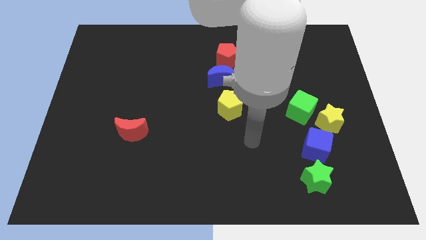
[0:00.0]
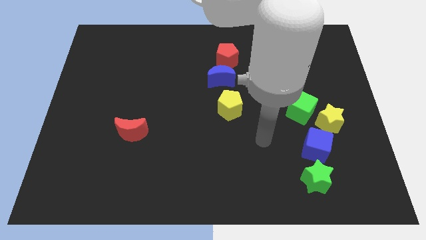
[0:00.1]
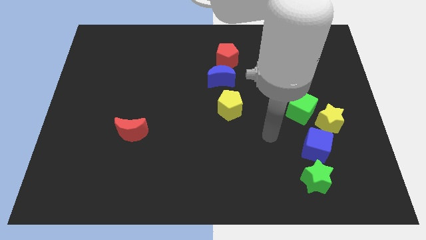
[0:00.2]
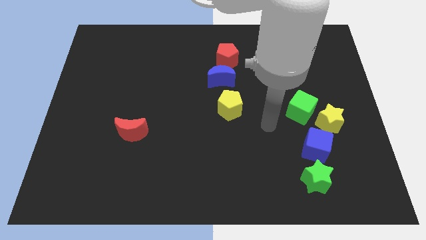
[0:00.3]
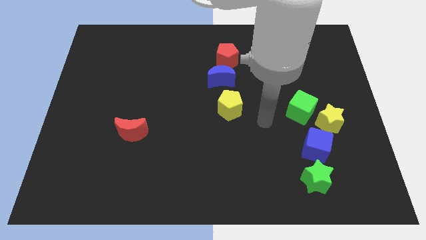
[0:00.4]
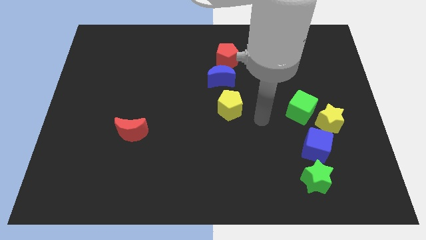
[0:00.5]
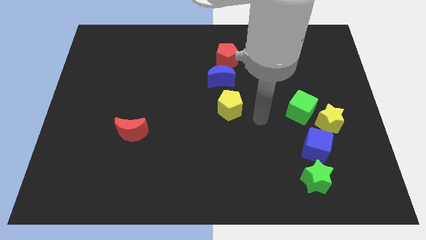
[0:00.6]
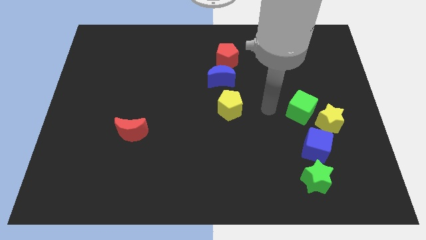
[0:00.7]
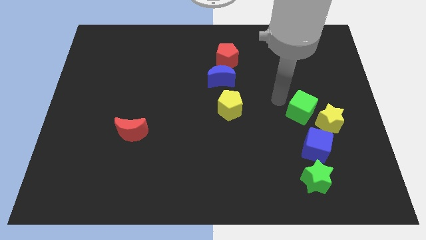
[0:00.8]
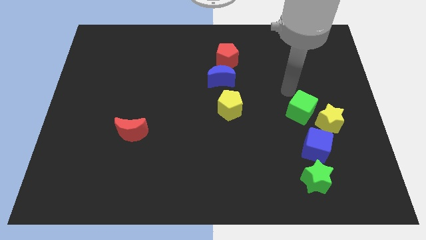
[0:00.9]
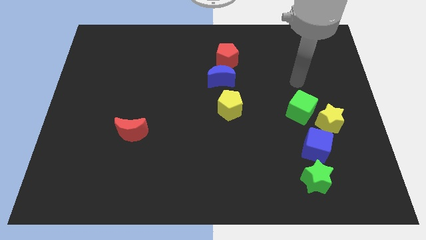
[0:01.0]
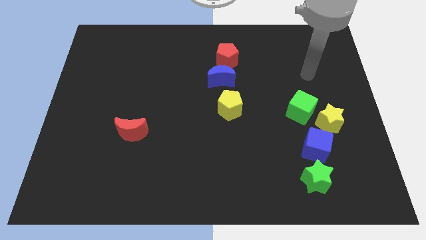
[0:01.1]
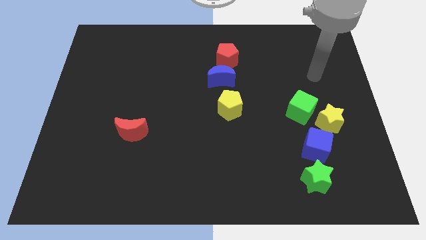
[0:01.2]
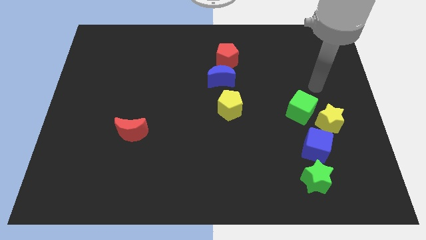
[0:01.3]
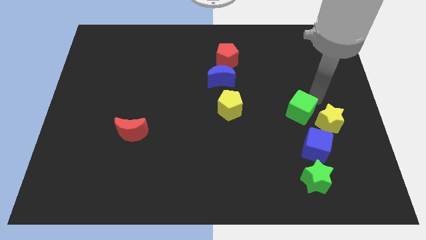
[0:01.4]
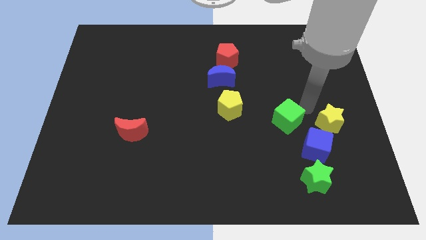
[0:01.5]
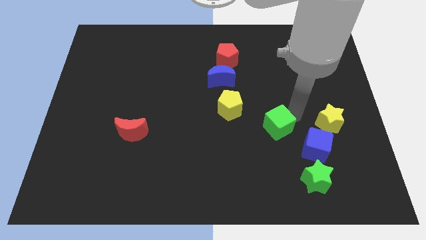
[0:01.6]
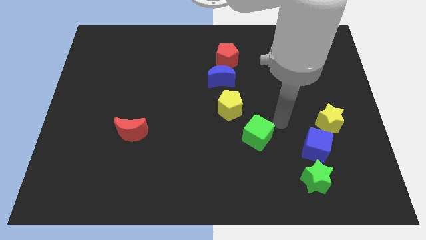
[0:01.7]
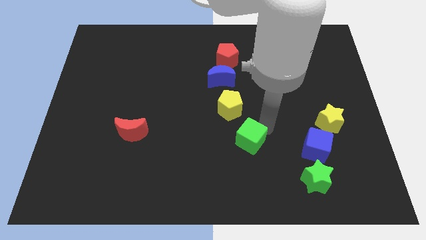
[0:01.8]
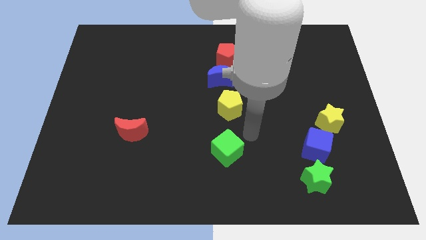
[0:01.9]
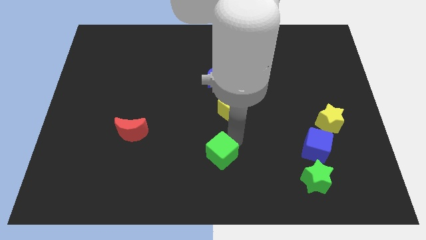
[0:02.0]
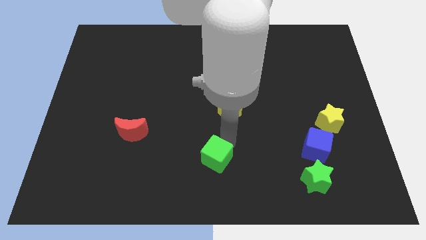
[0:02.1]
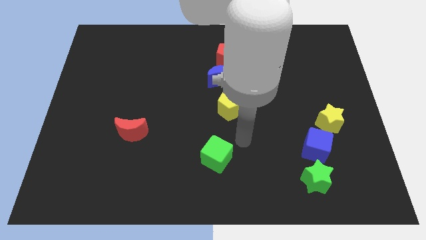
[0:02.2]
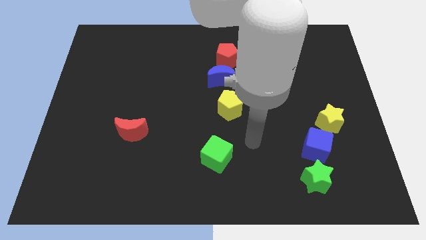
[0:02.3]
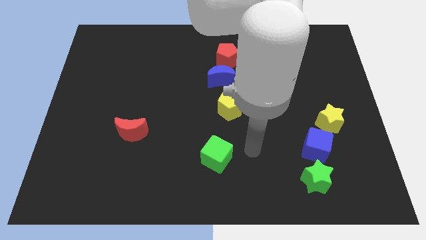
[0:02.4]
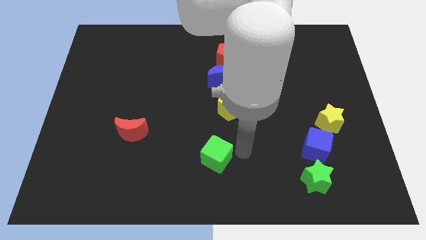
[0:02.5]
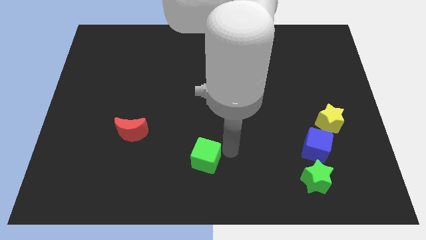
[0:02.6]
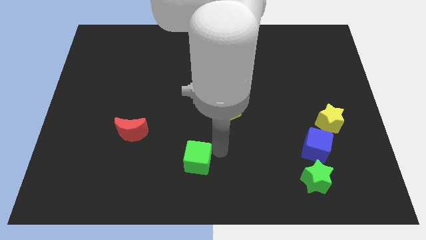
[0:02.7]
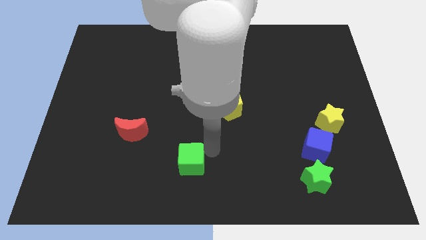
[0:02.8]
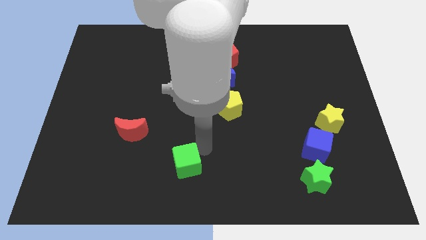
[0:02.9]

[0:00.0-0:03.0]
separate green cube form yellow star

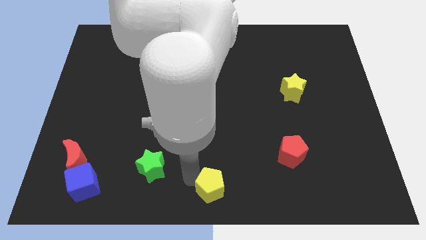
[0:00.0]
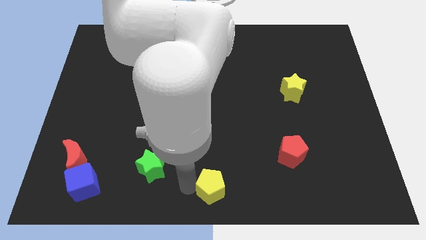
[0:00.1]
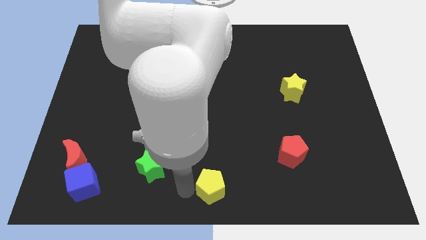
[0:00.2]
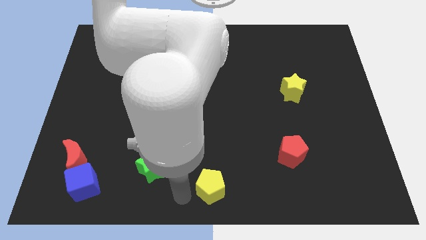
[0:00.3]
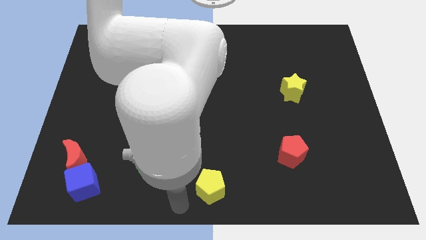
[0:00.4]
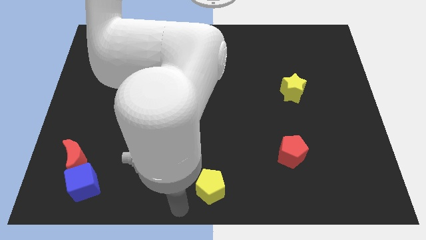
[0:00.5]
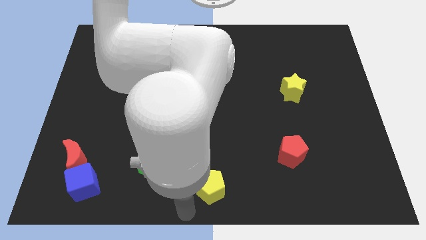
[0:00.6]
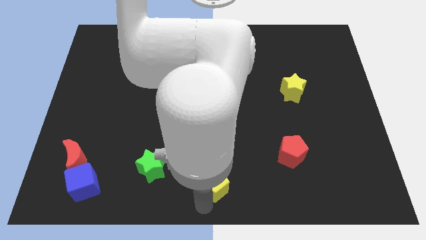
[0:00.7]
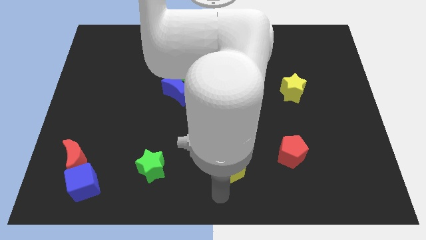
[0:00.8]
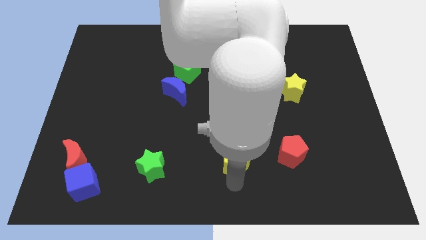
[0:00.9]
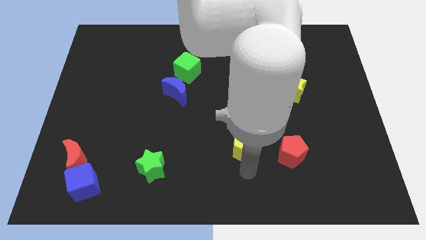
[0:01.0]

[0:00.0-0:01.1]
push the yellow pentagon to the left of the red pentagon

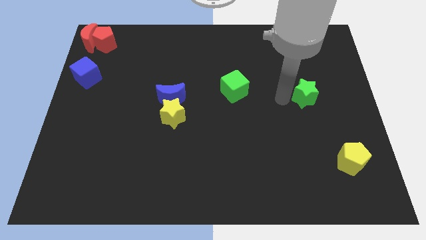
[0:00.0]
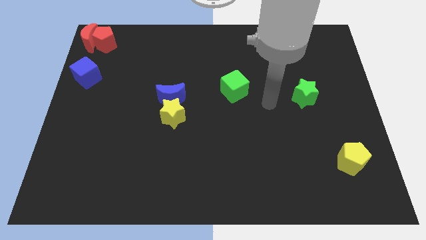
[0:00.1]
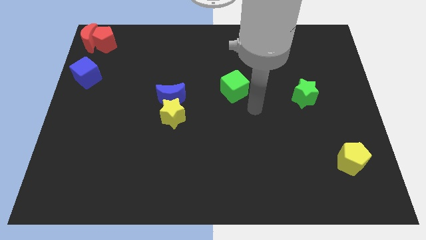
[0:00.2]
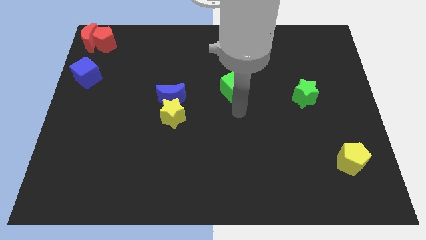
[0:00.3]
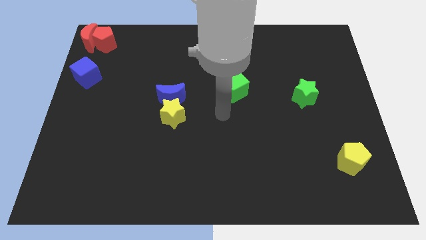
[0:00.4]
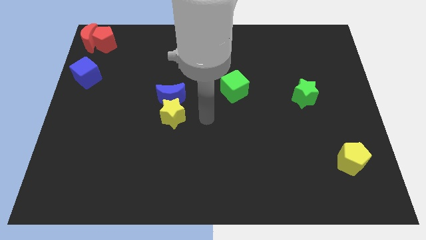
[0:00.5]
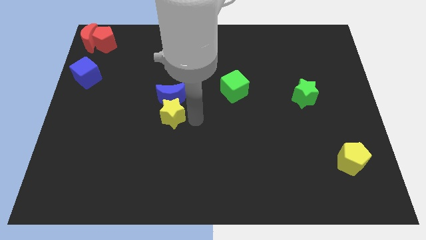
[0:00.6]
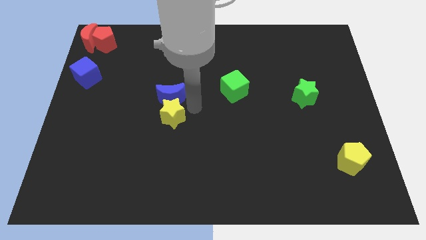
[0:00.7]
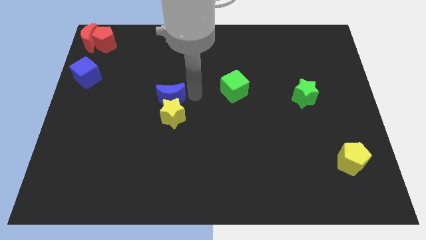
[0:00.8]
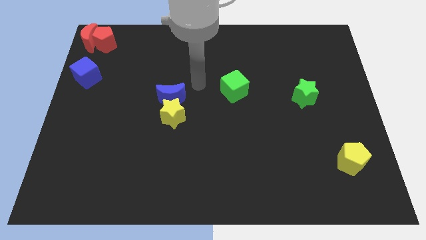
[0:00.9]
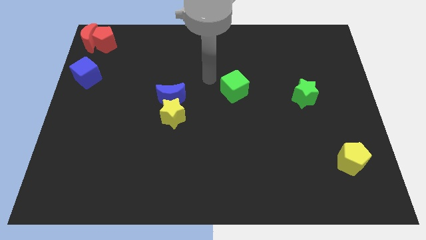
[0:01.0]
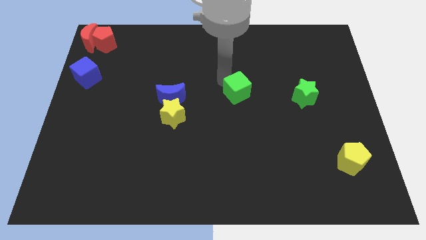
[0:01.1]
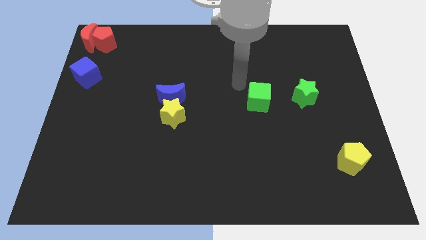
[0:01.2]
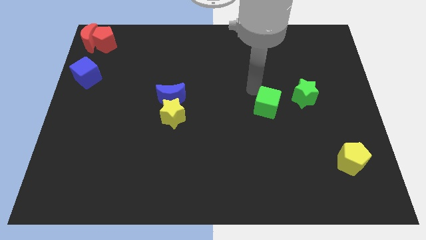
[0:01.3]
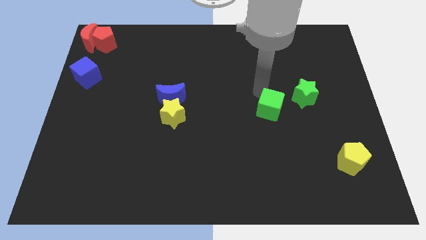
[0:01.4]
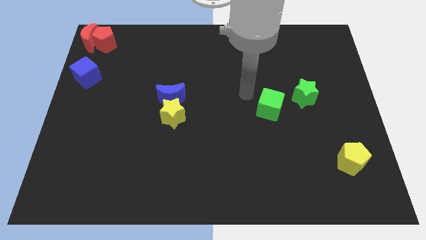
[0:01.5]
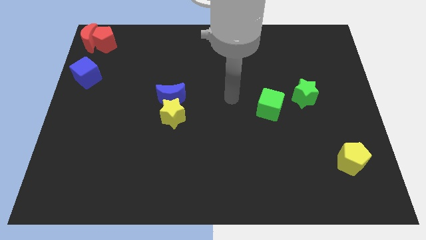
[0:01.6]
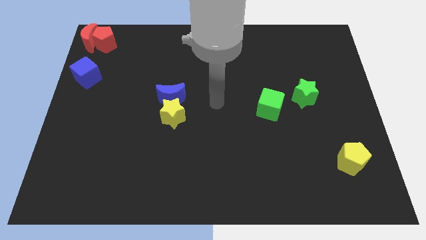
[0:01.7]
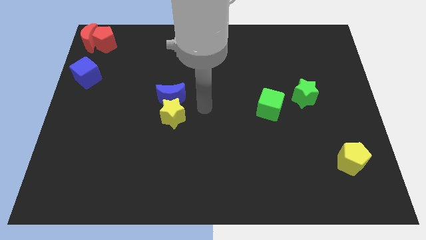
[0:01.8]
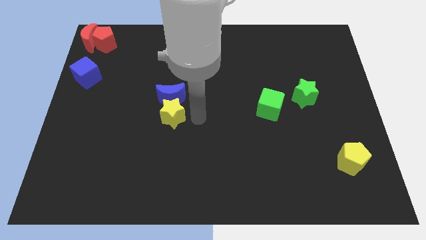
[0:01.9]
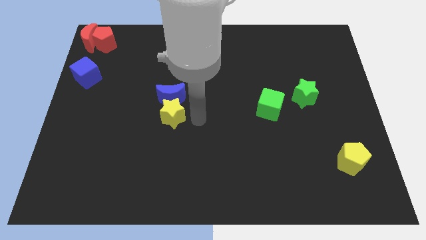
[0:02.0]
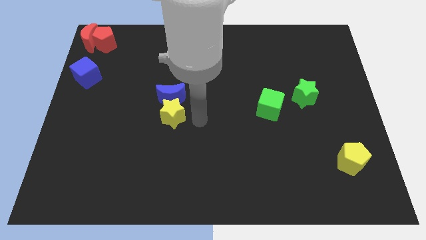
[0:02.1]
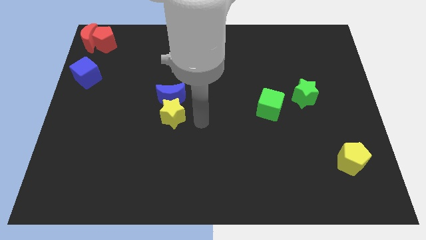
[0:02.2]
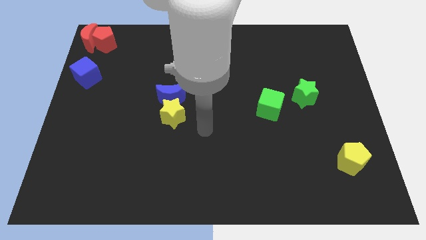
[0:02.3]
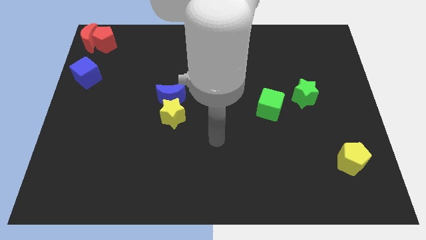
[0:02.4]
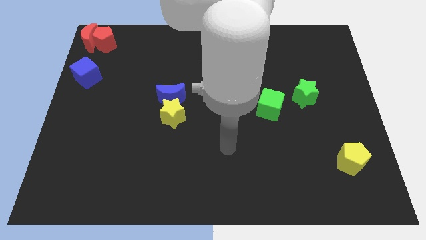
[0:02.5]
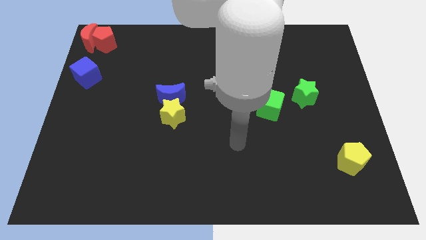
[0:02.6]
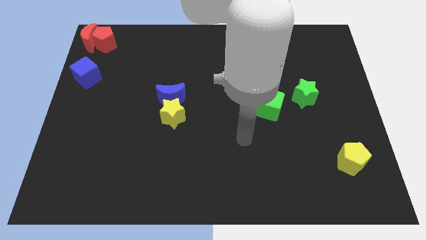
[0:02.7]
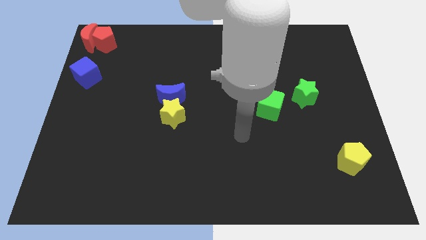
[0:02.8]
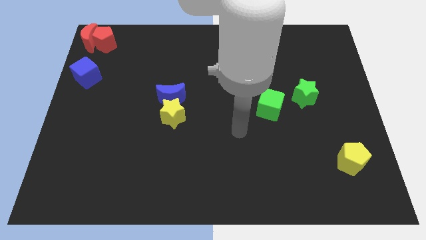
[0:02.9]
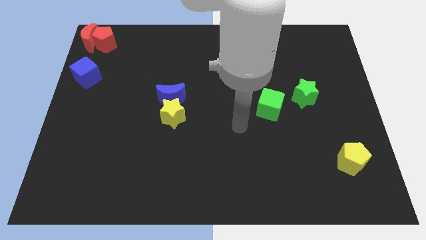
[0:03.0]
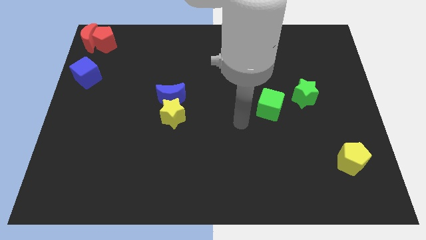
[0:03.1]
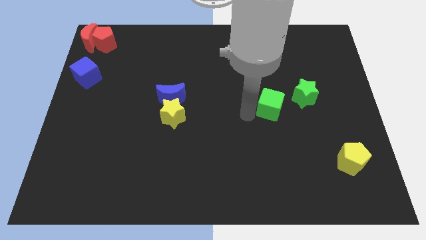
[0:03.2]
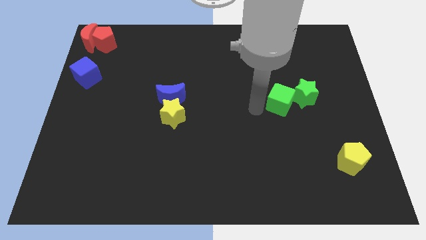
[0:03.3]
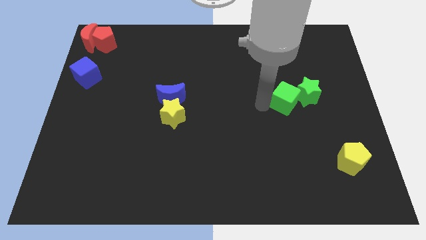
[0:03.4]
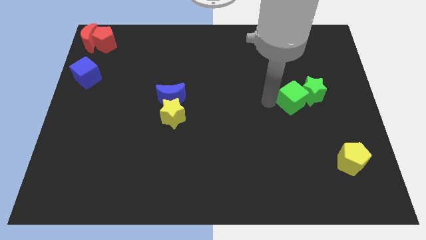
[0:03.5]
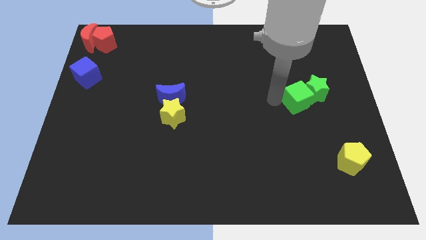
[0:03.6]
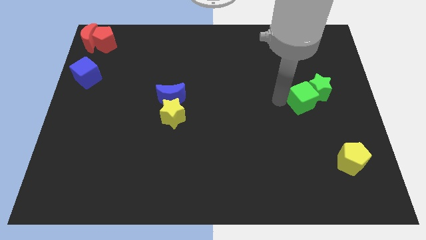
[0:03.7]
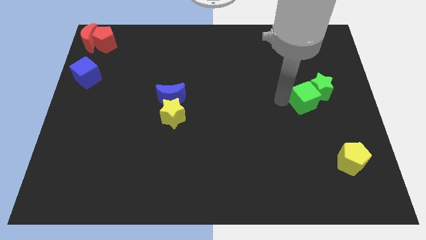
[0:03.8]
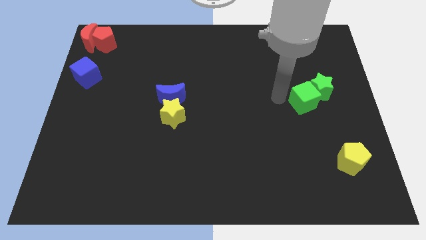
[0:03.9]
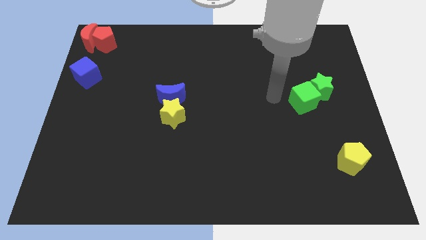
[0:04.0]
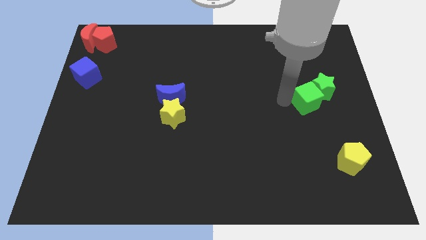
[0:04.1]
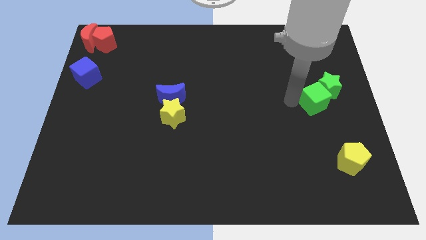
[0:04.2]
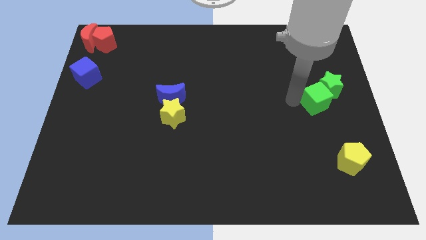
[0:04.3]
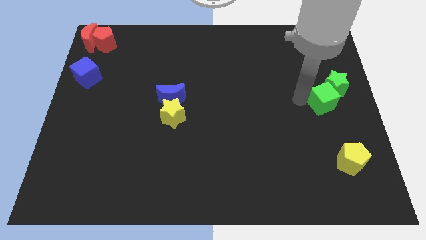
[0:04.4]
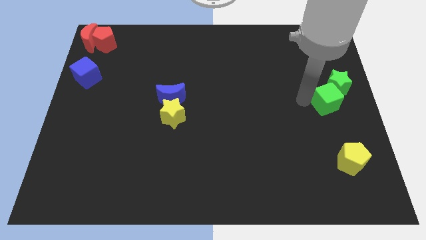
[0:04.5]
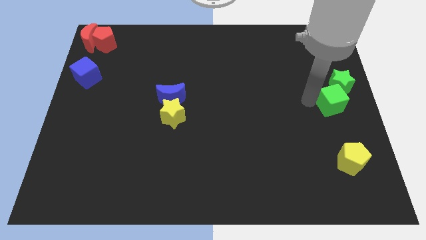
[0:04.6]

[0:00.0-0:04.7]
slide the green cube along with the green star towards the center right

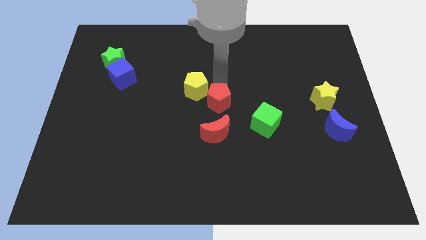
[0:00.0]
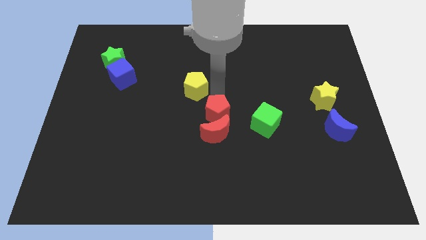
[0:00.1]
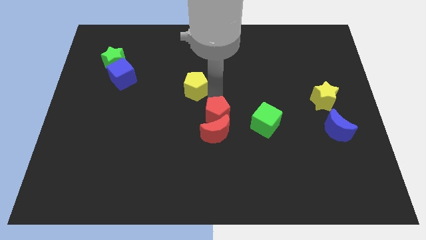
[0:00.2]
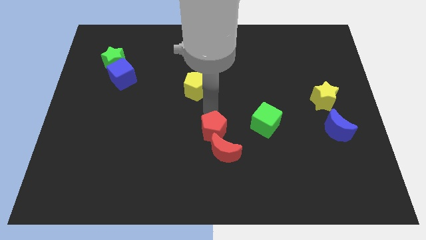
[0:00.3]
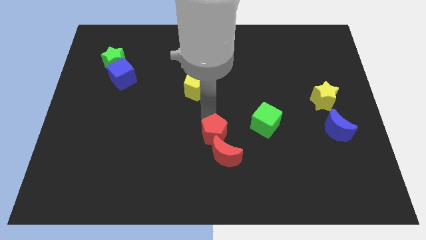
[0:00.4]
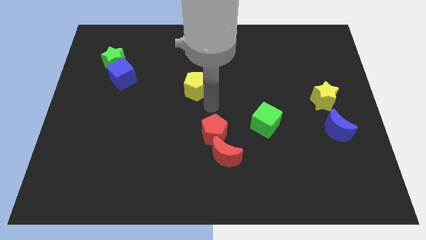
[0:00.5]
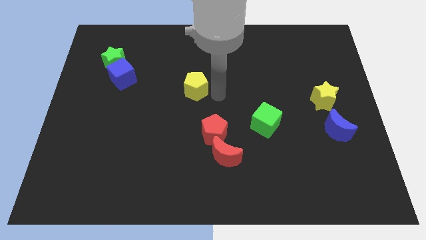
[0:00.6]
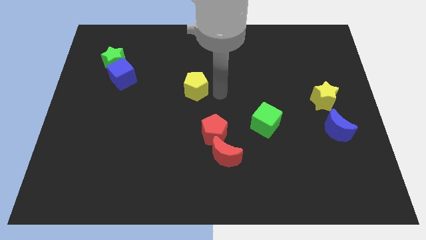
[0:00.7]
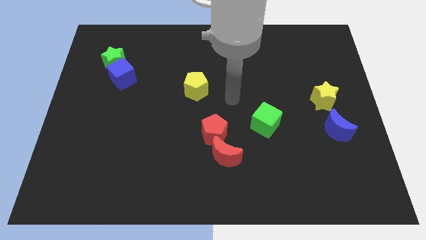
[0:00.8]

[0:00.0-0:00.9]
push the red pentagon into the red crescent to the bottom center
